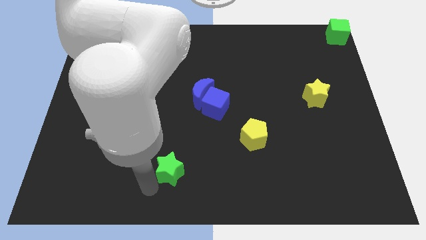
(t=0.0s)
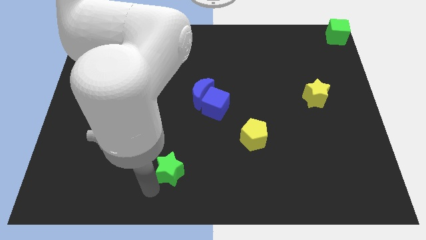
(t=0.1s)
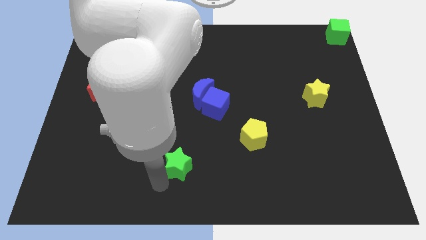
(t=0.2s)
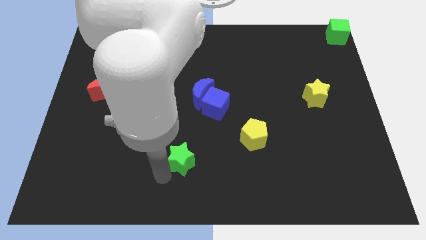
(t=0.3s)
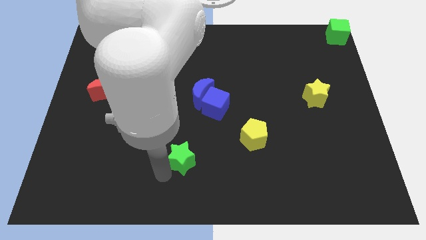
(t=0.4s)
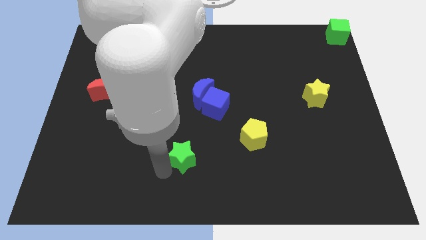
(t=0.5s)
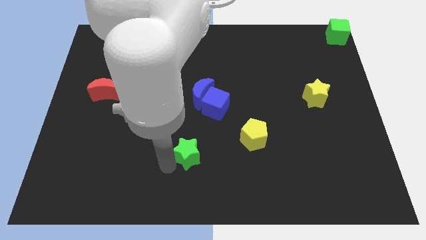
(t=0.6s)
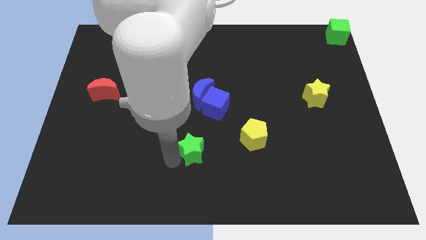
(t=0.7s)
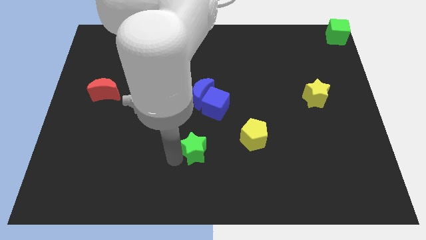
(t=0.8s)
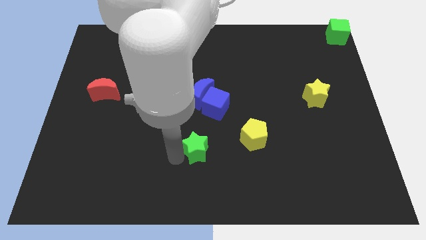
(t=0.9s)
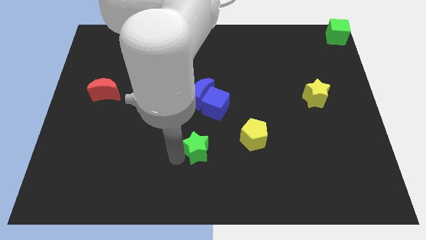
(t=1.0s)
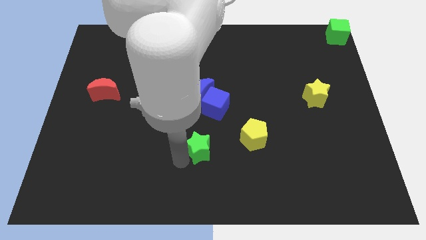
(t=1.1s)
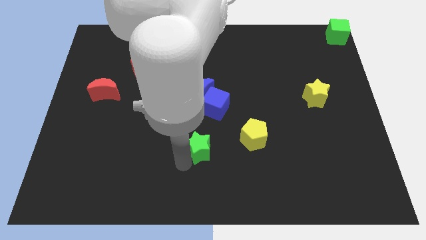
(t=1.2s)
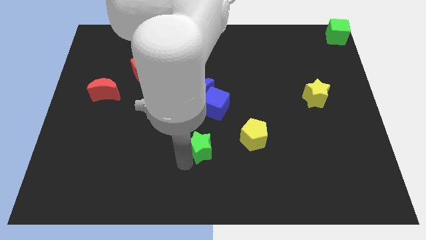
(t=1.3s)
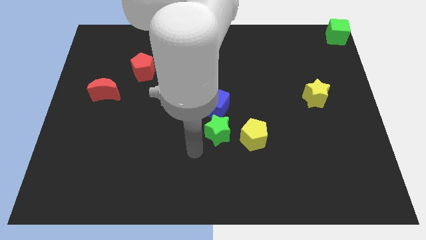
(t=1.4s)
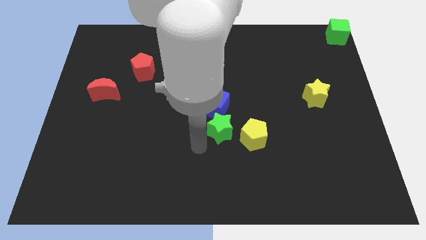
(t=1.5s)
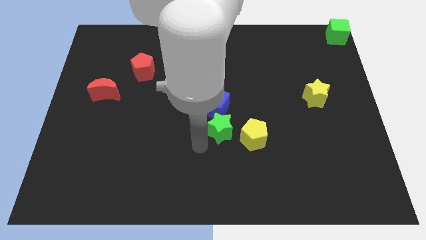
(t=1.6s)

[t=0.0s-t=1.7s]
move the green star below the blue cube

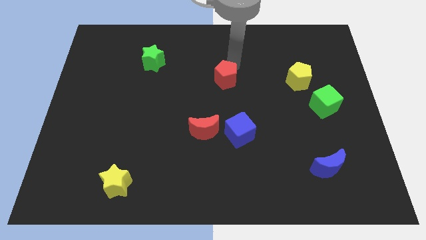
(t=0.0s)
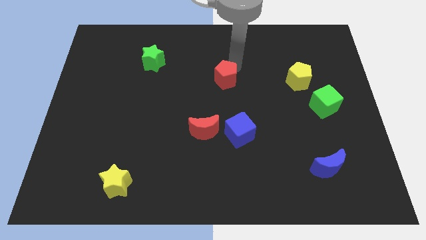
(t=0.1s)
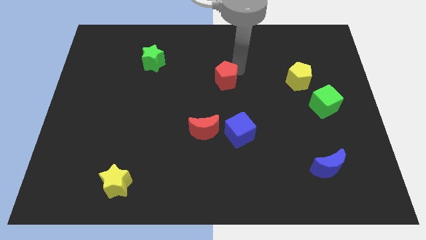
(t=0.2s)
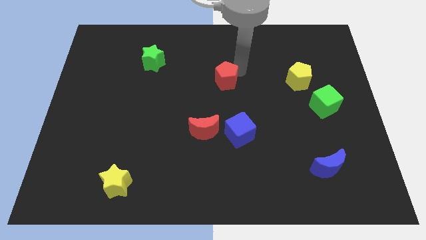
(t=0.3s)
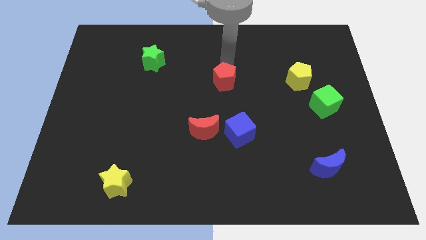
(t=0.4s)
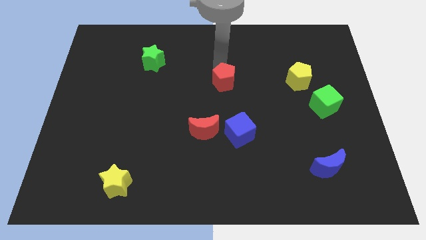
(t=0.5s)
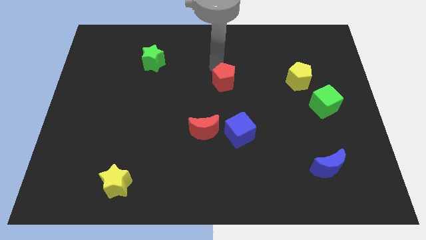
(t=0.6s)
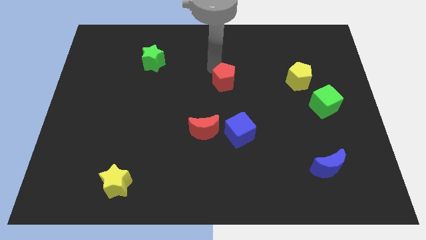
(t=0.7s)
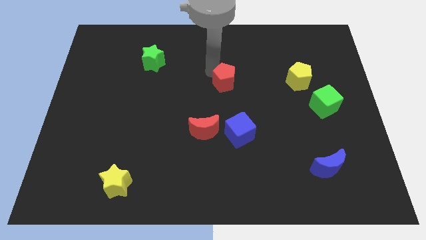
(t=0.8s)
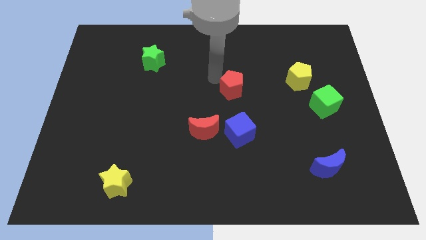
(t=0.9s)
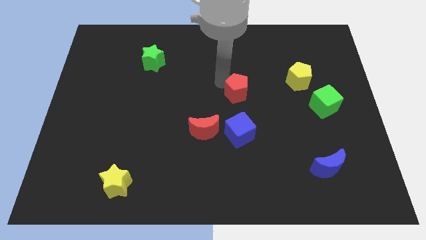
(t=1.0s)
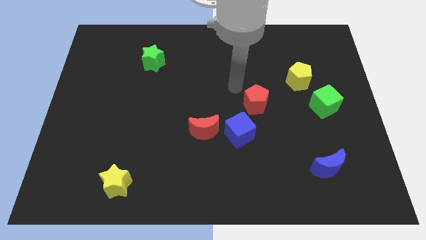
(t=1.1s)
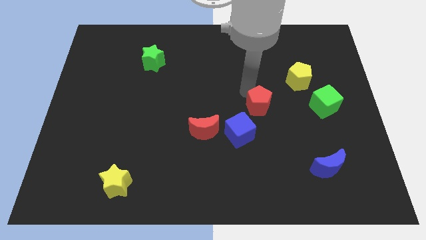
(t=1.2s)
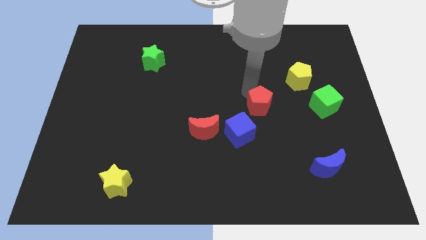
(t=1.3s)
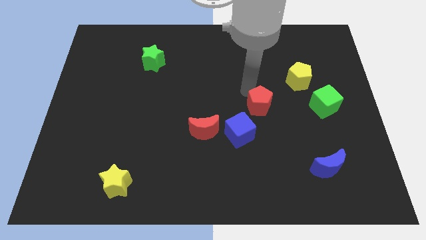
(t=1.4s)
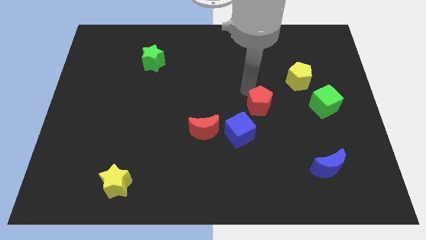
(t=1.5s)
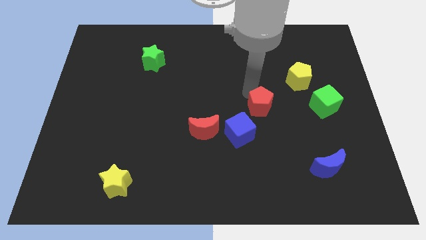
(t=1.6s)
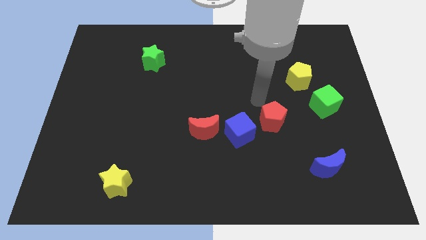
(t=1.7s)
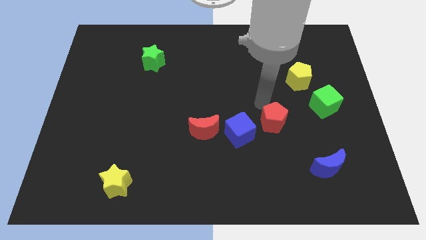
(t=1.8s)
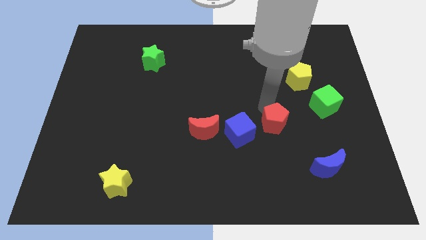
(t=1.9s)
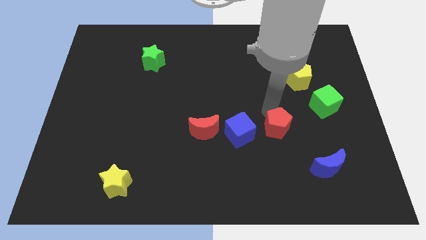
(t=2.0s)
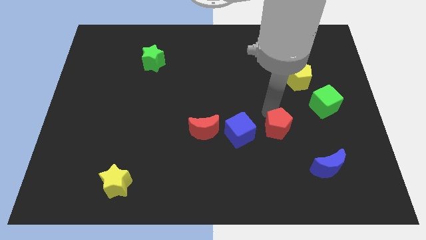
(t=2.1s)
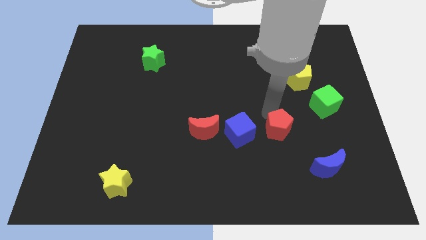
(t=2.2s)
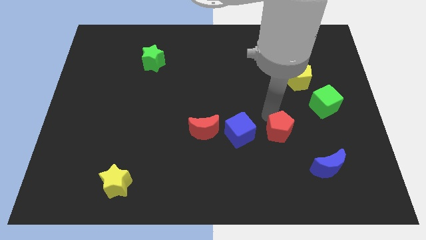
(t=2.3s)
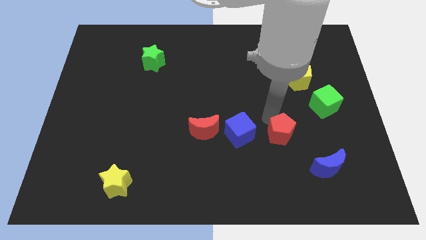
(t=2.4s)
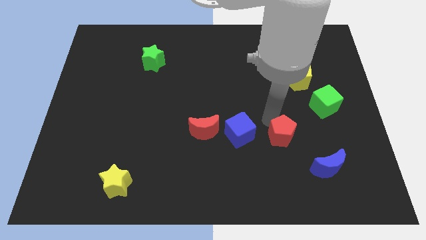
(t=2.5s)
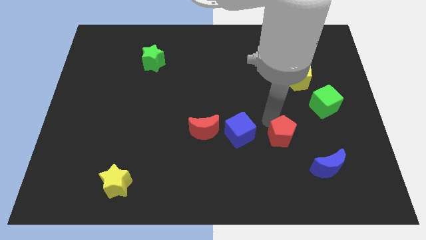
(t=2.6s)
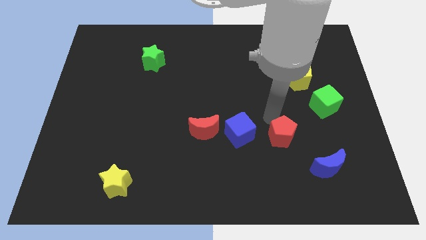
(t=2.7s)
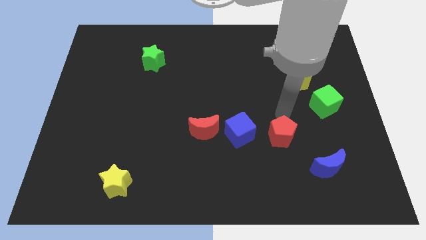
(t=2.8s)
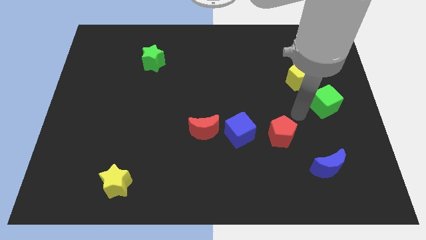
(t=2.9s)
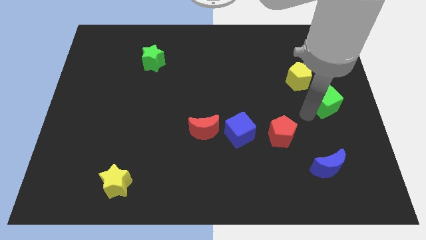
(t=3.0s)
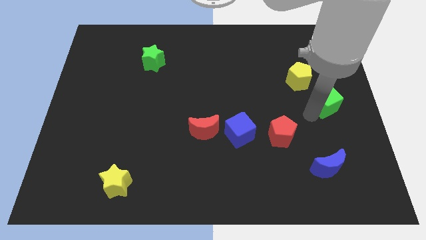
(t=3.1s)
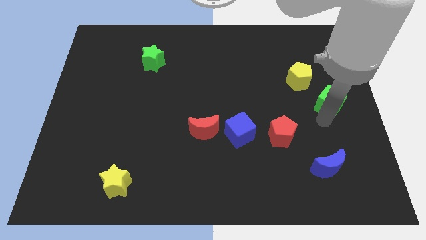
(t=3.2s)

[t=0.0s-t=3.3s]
place red pentagon to the right of blue cube

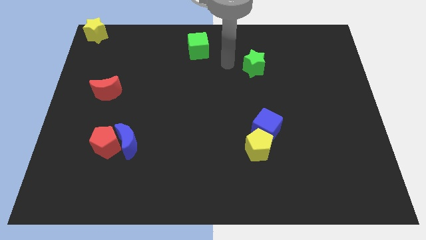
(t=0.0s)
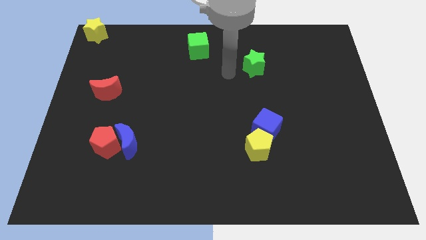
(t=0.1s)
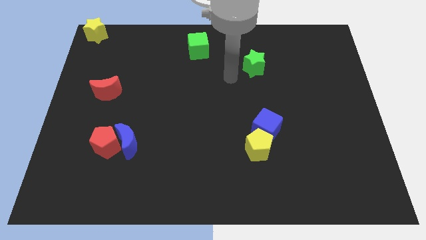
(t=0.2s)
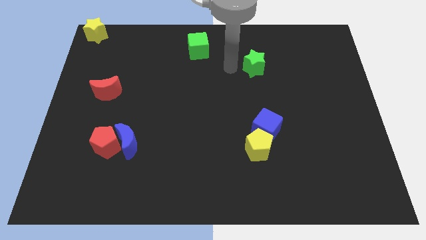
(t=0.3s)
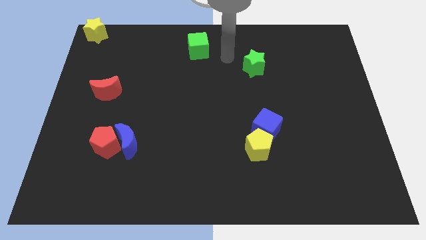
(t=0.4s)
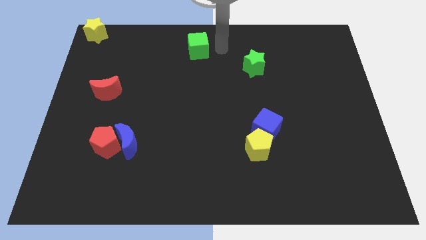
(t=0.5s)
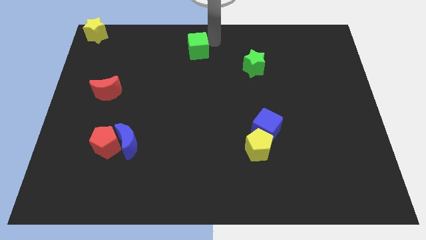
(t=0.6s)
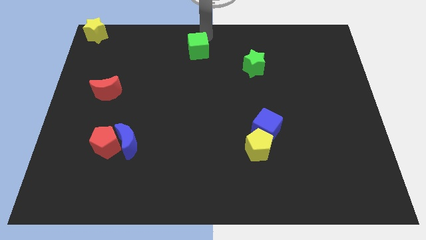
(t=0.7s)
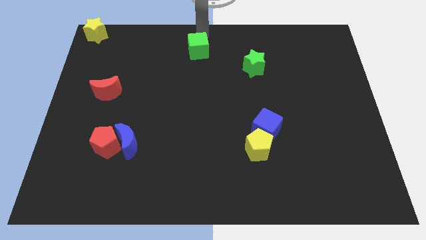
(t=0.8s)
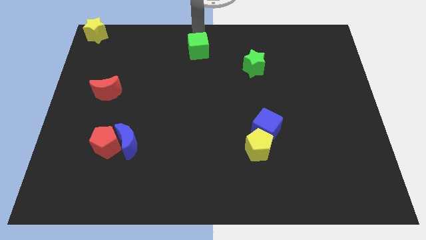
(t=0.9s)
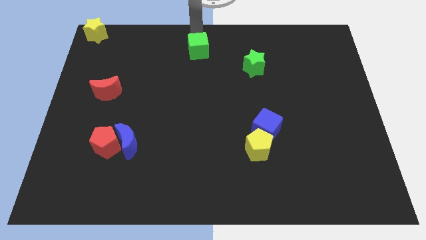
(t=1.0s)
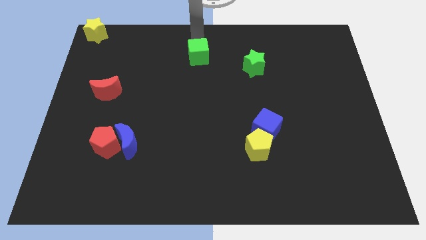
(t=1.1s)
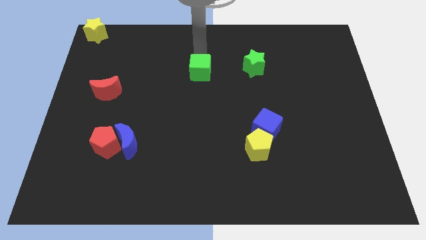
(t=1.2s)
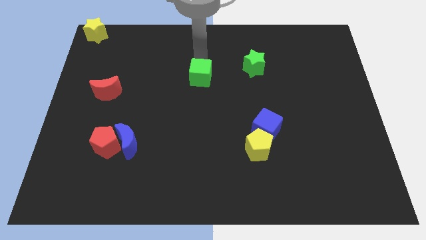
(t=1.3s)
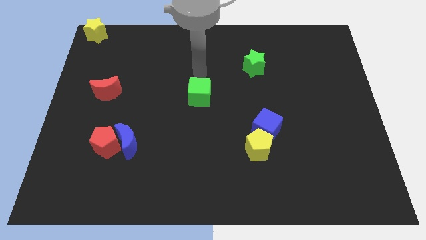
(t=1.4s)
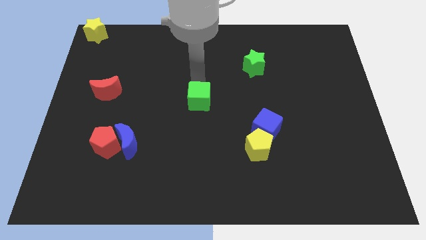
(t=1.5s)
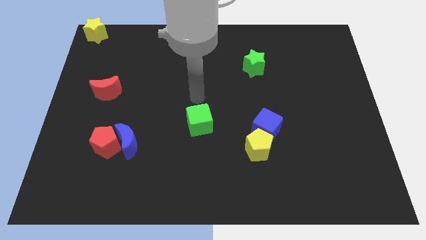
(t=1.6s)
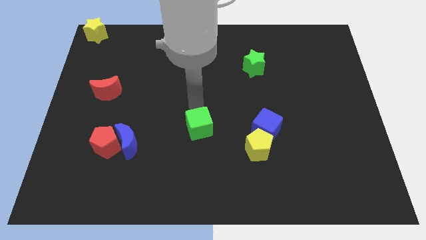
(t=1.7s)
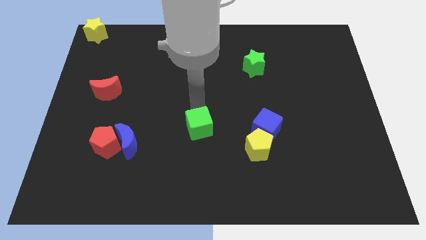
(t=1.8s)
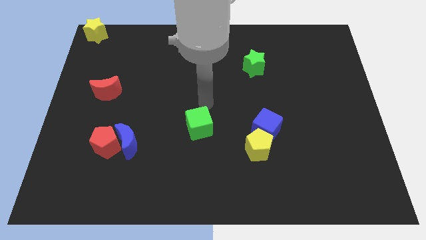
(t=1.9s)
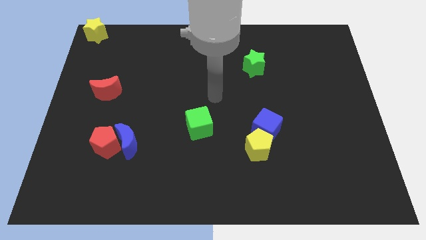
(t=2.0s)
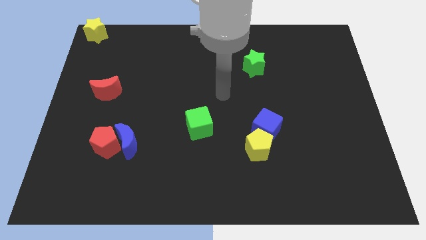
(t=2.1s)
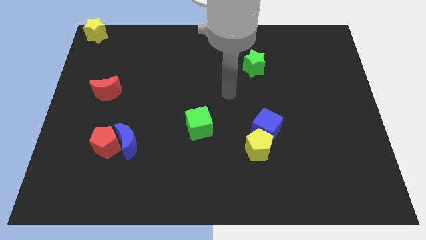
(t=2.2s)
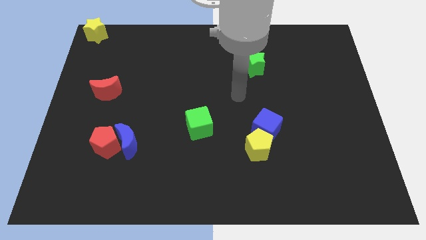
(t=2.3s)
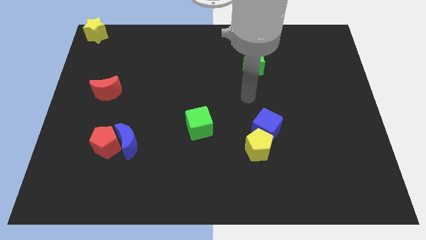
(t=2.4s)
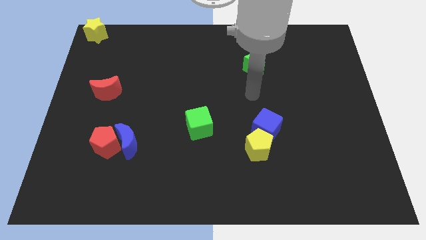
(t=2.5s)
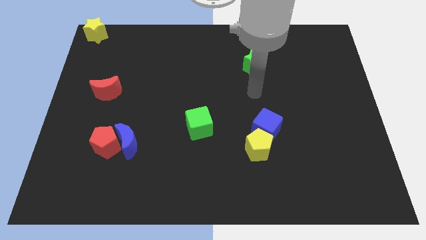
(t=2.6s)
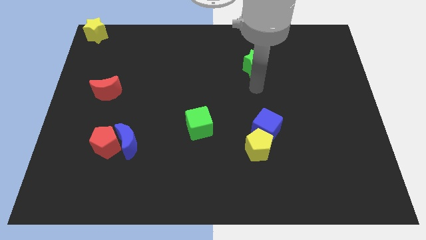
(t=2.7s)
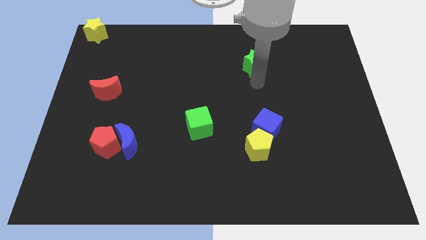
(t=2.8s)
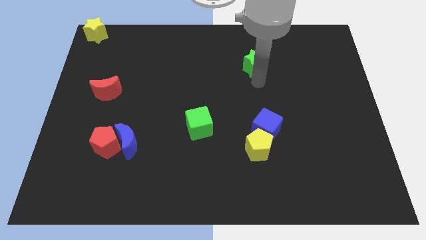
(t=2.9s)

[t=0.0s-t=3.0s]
place the green cube left to the blue cube

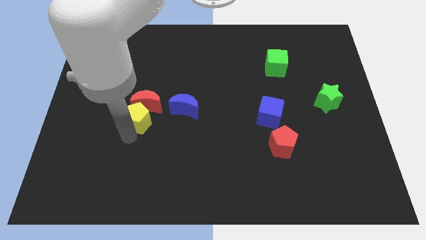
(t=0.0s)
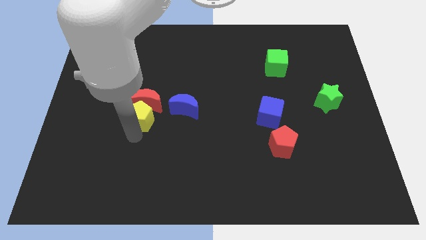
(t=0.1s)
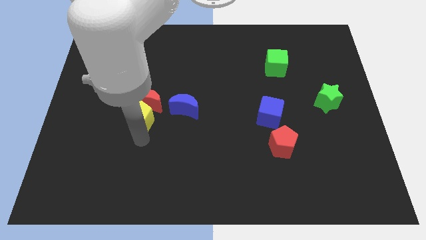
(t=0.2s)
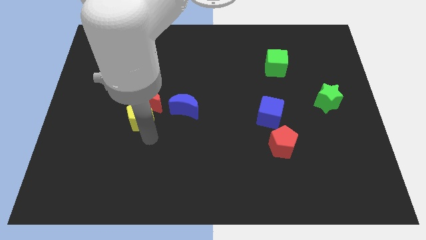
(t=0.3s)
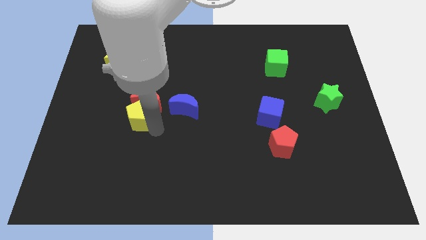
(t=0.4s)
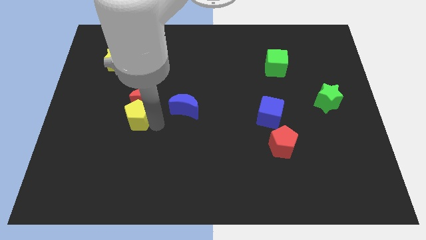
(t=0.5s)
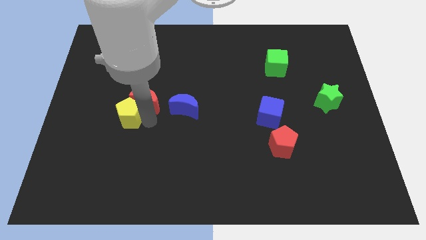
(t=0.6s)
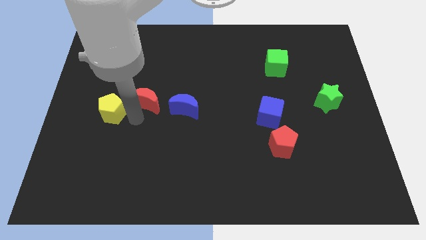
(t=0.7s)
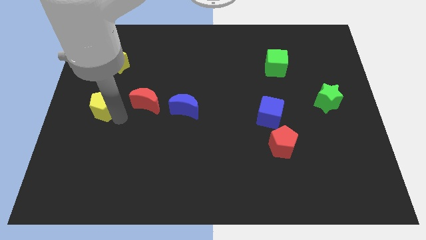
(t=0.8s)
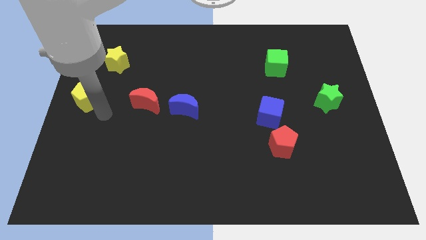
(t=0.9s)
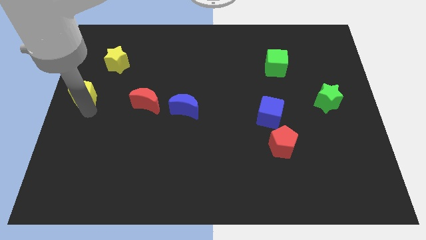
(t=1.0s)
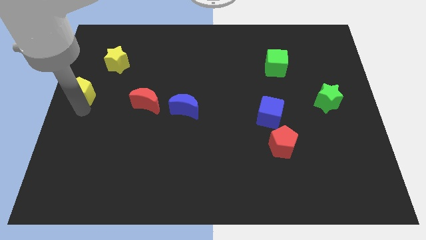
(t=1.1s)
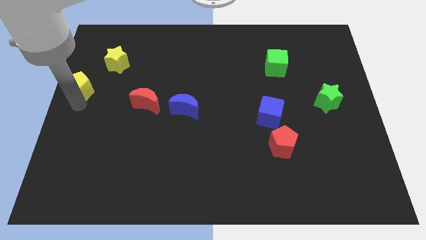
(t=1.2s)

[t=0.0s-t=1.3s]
place the yellow pentagon diagonally to the yellow star
